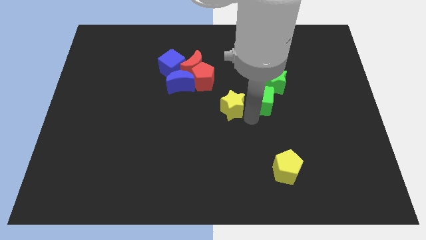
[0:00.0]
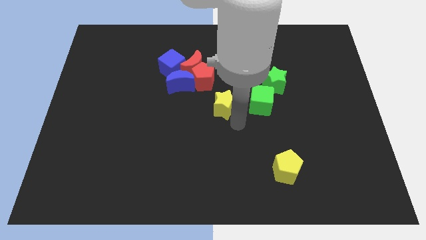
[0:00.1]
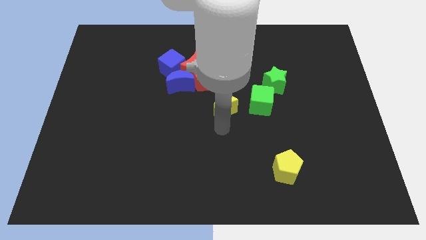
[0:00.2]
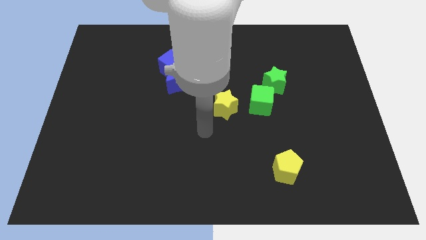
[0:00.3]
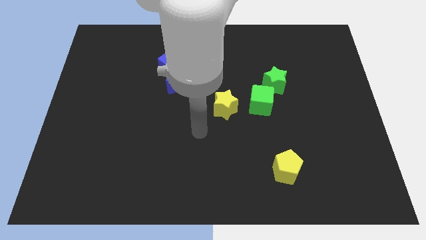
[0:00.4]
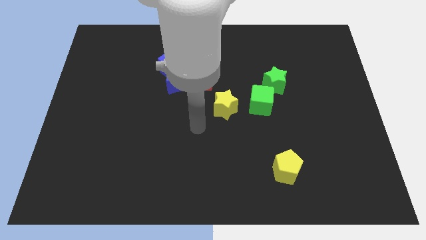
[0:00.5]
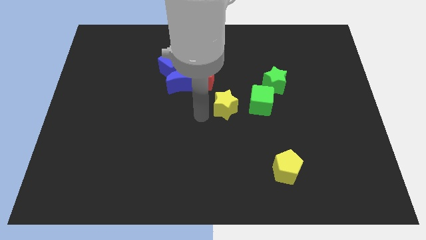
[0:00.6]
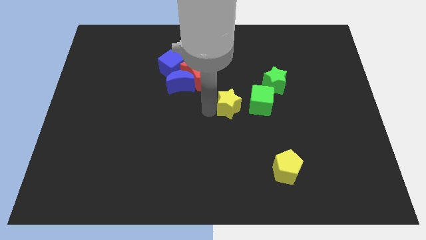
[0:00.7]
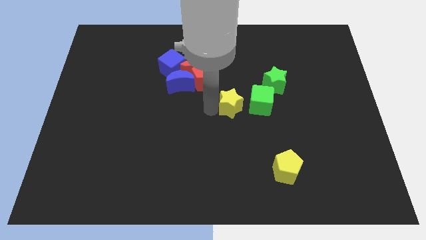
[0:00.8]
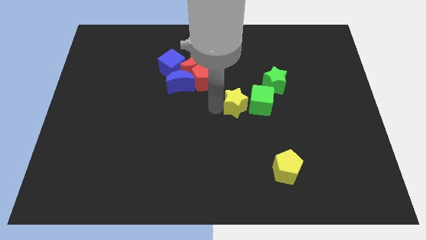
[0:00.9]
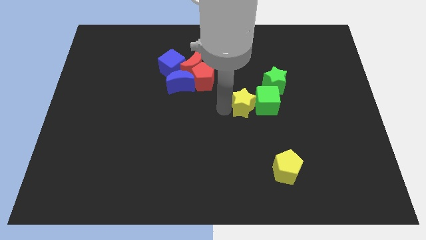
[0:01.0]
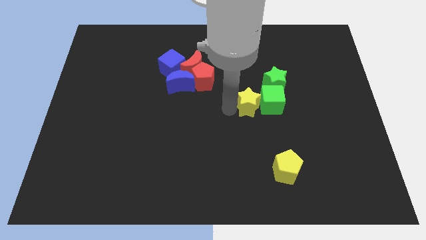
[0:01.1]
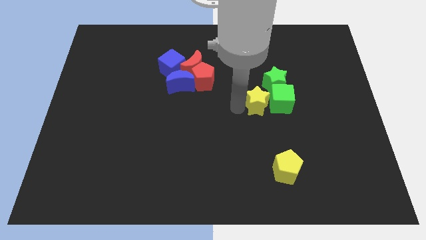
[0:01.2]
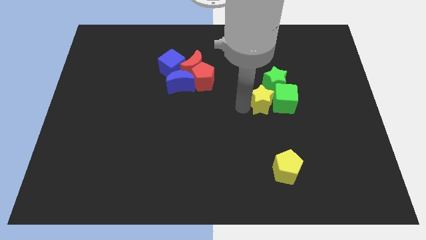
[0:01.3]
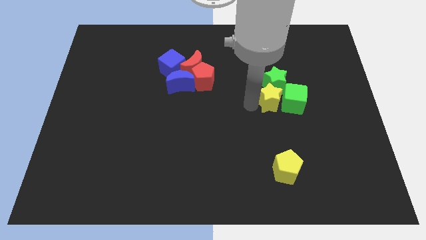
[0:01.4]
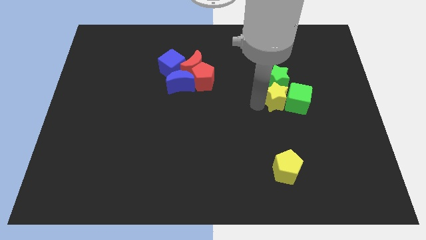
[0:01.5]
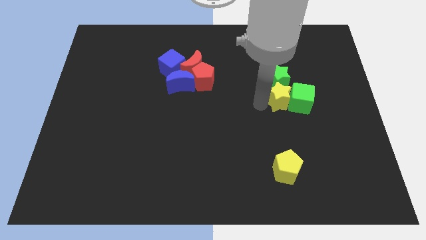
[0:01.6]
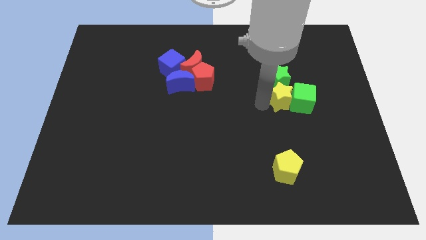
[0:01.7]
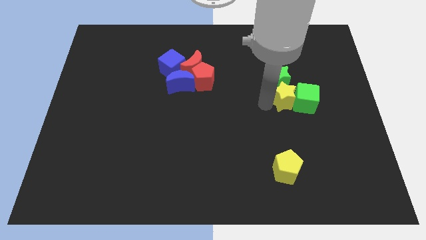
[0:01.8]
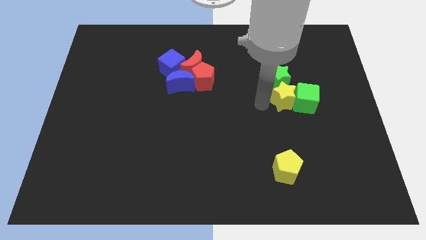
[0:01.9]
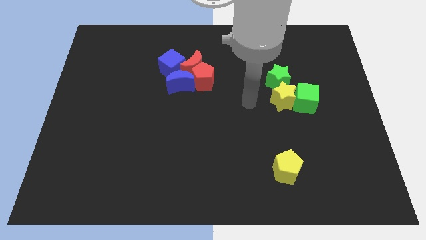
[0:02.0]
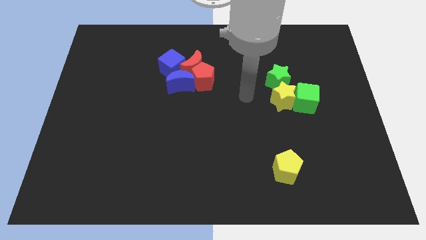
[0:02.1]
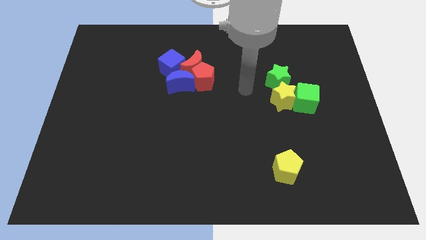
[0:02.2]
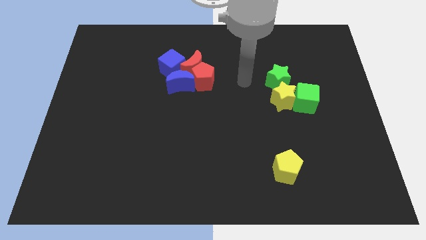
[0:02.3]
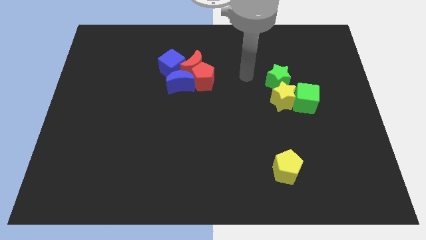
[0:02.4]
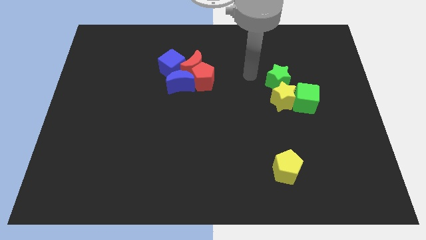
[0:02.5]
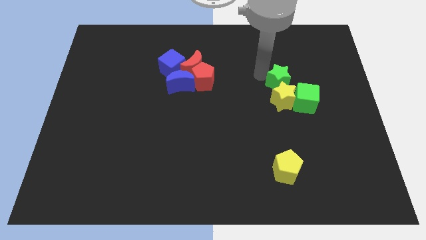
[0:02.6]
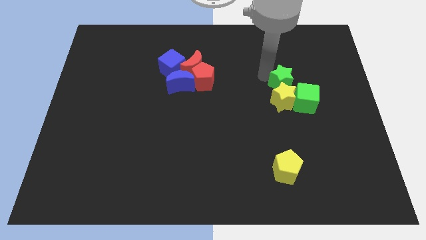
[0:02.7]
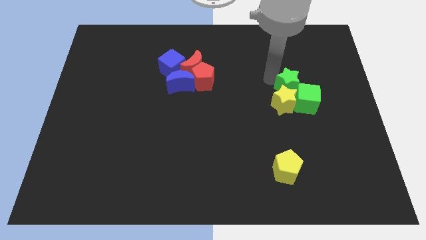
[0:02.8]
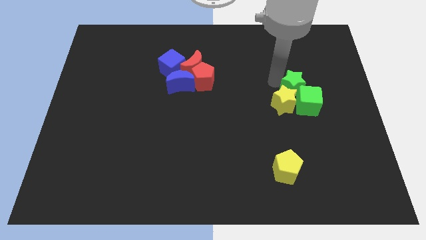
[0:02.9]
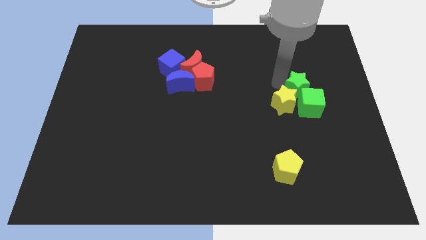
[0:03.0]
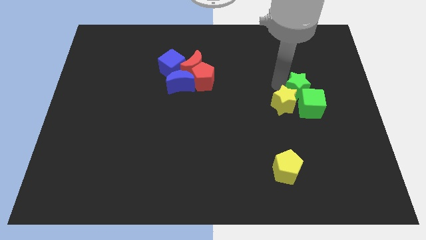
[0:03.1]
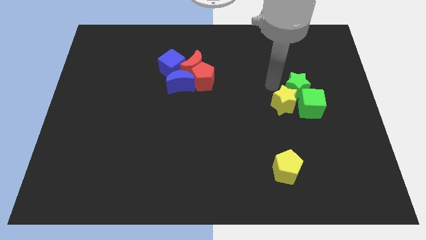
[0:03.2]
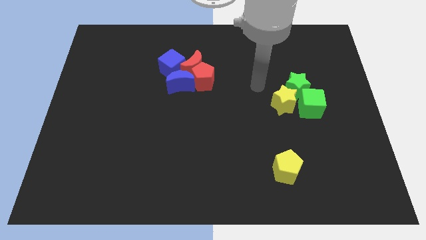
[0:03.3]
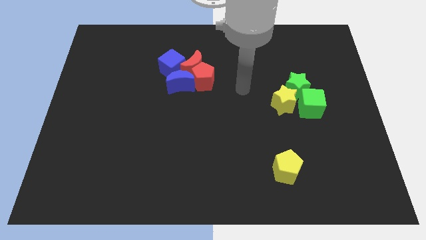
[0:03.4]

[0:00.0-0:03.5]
move the yellow star and green objscts to the right side of the table

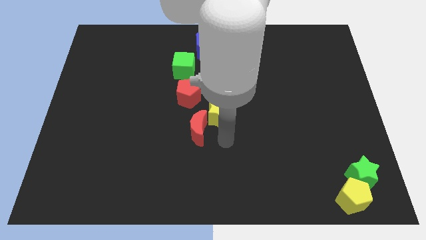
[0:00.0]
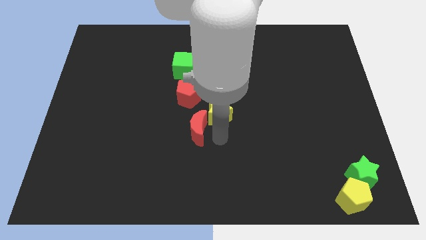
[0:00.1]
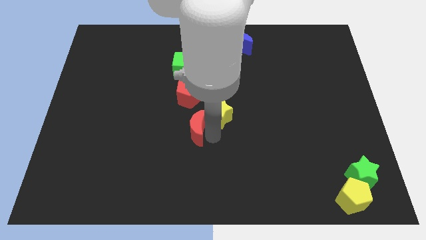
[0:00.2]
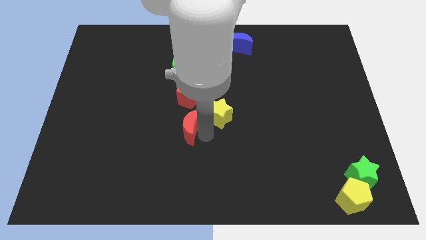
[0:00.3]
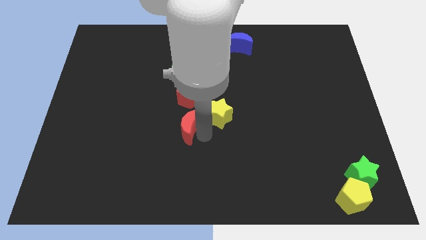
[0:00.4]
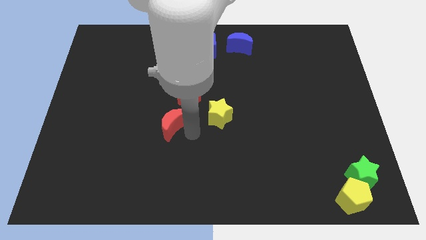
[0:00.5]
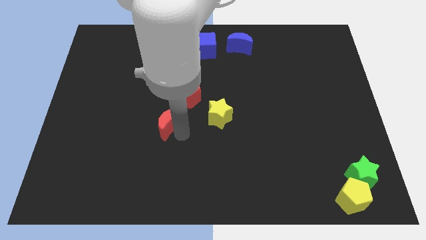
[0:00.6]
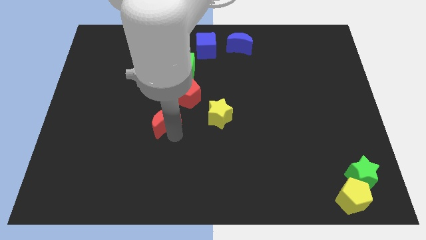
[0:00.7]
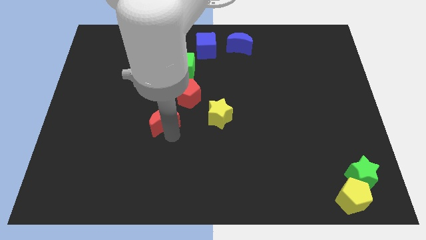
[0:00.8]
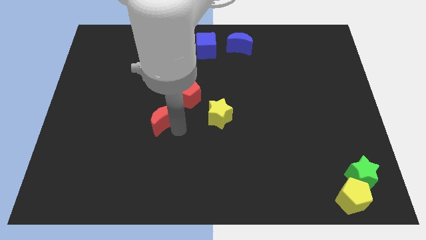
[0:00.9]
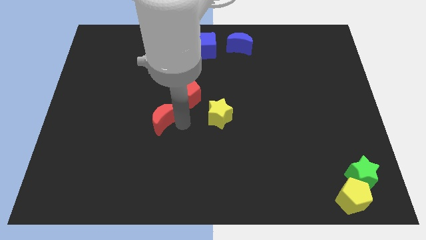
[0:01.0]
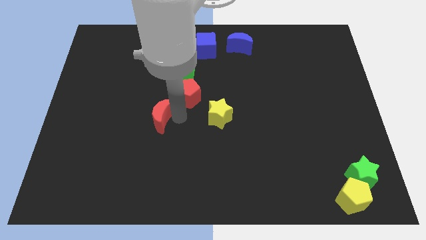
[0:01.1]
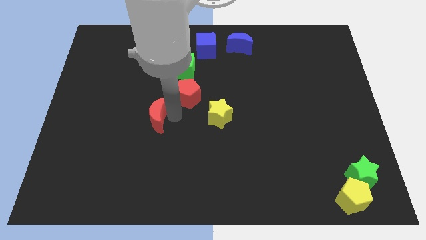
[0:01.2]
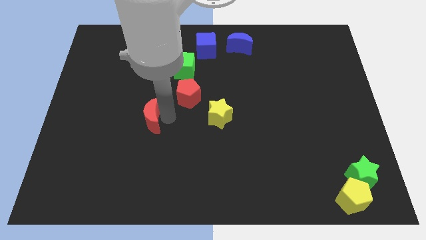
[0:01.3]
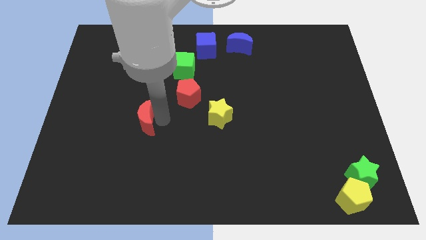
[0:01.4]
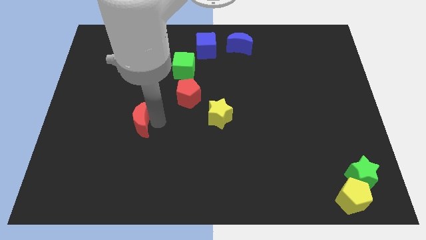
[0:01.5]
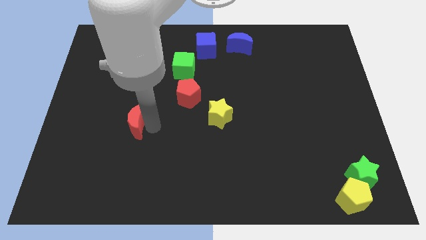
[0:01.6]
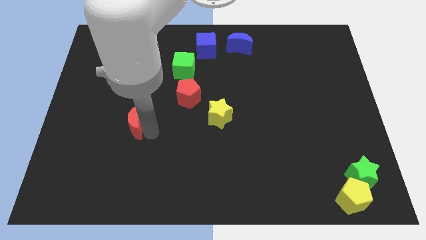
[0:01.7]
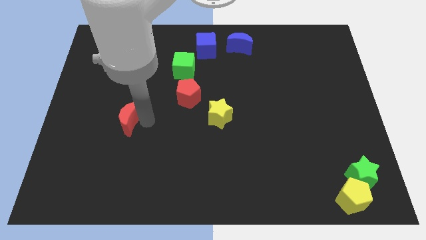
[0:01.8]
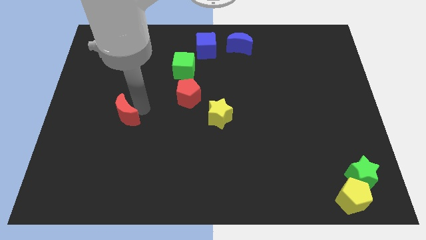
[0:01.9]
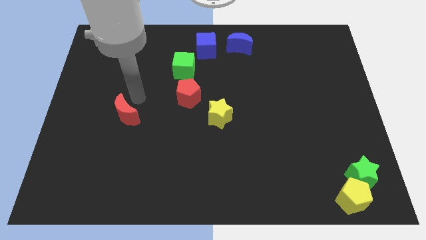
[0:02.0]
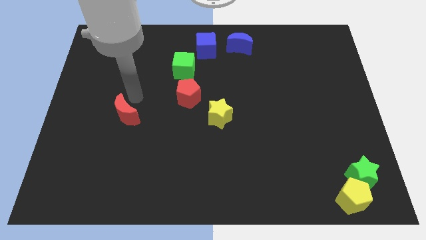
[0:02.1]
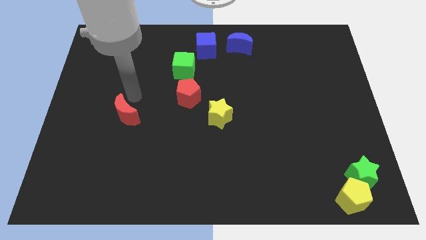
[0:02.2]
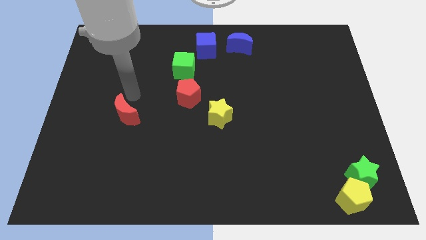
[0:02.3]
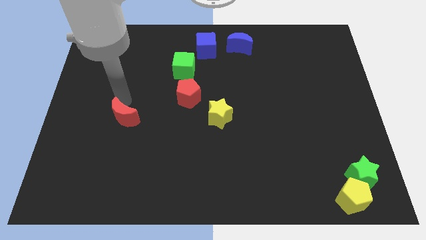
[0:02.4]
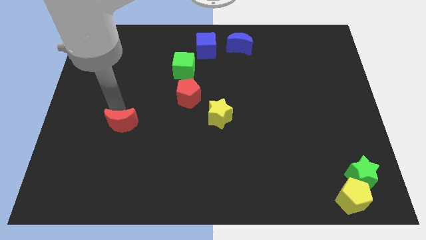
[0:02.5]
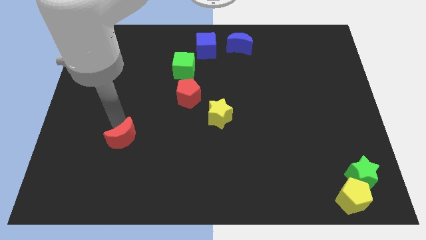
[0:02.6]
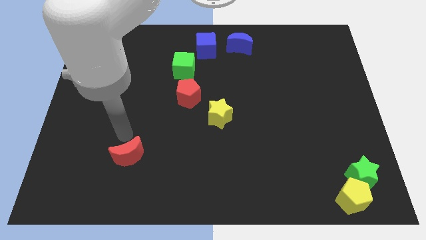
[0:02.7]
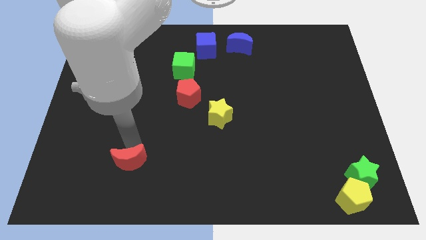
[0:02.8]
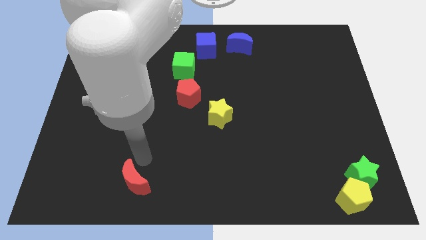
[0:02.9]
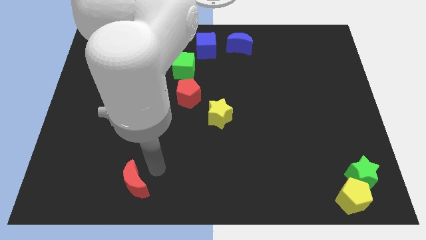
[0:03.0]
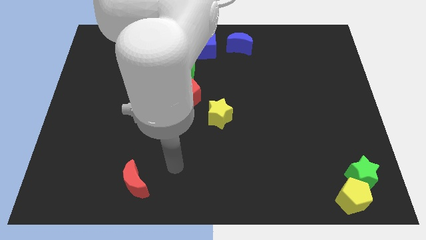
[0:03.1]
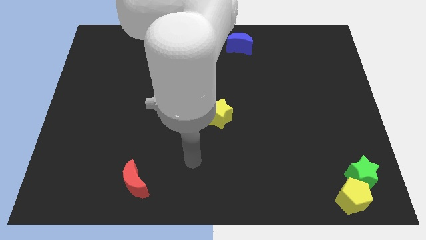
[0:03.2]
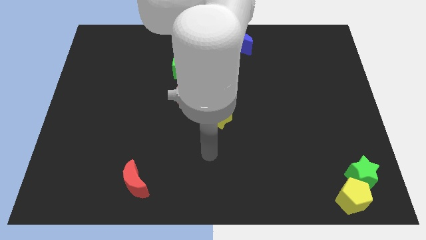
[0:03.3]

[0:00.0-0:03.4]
move the red moon to the bottom center of the board

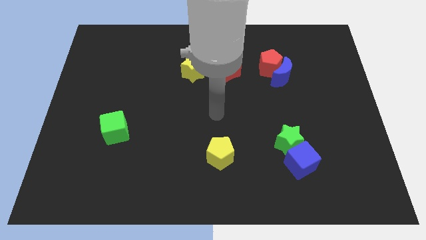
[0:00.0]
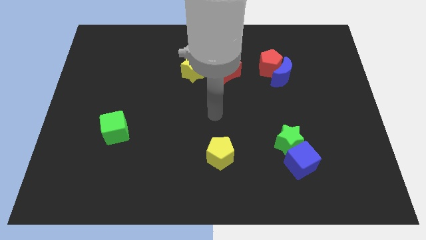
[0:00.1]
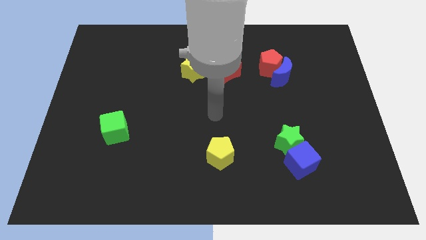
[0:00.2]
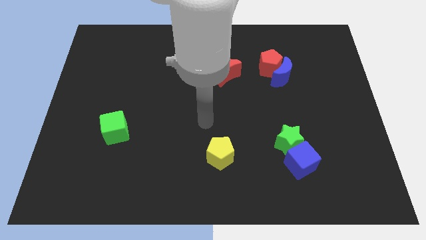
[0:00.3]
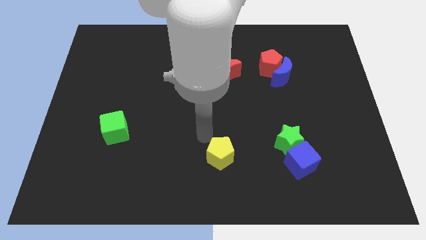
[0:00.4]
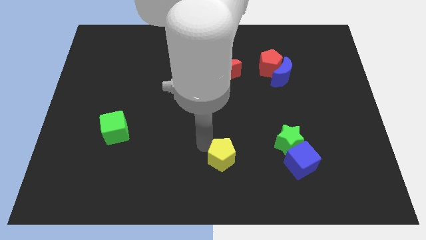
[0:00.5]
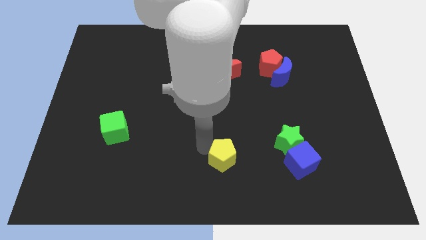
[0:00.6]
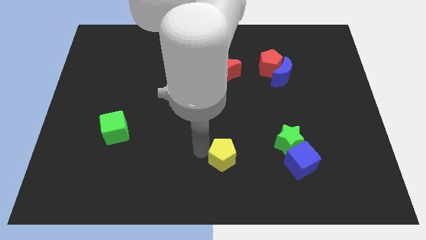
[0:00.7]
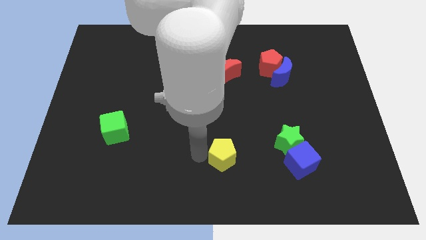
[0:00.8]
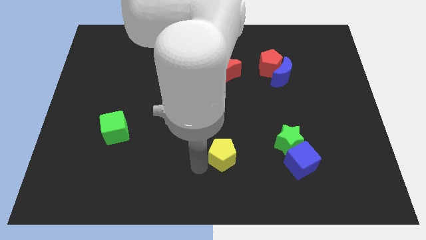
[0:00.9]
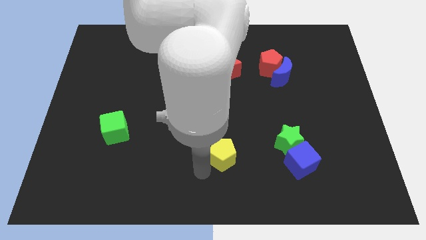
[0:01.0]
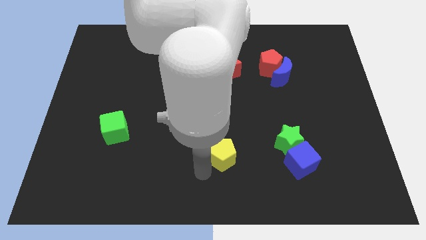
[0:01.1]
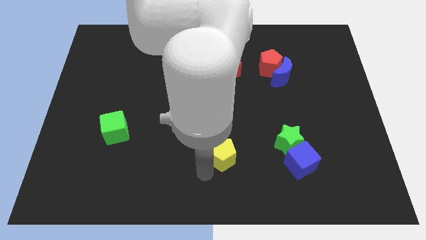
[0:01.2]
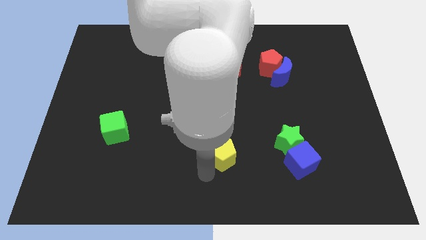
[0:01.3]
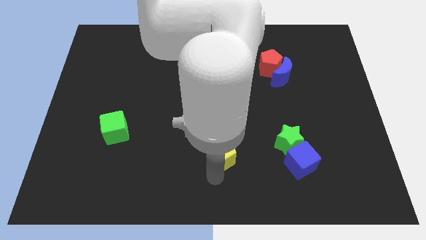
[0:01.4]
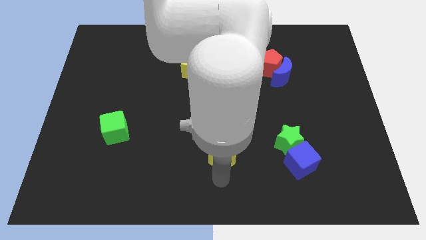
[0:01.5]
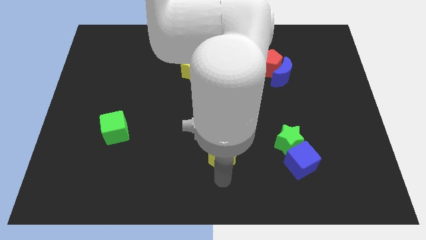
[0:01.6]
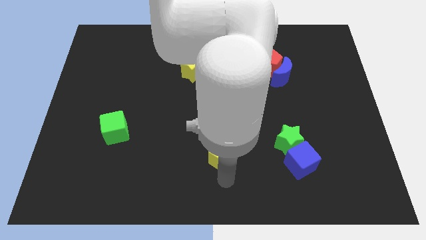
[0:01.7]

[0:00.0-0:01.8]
point your arm at the bottom side of the yellow pentagon
